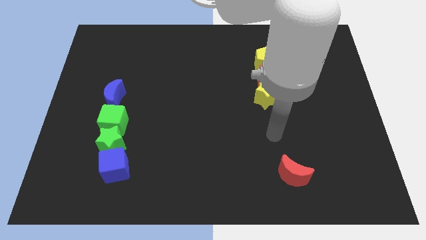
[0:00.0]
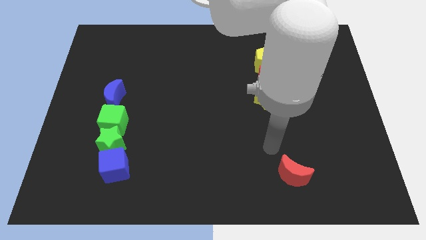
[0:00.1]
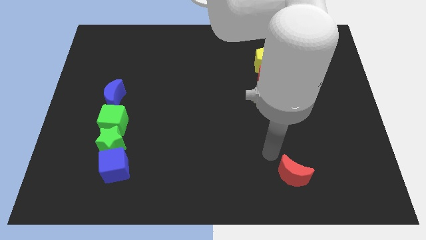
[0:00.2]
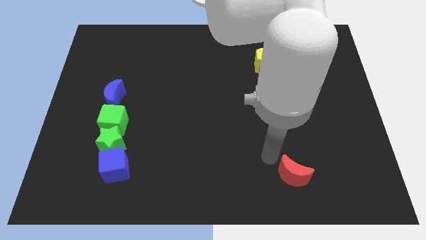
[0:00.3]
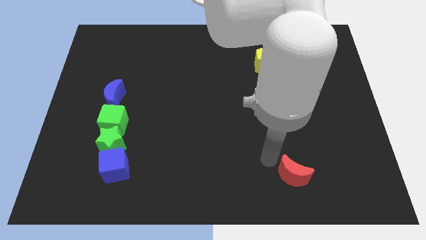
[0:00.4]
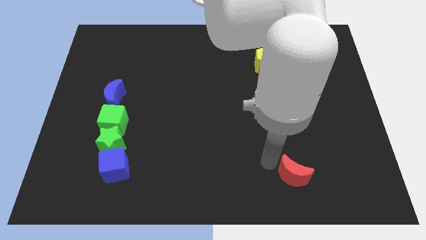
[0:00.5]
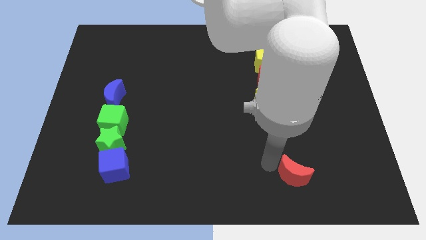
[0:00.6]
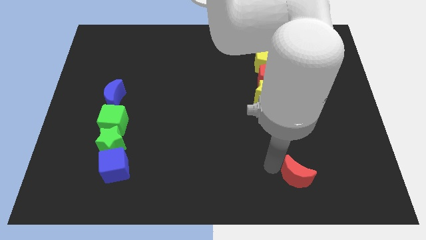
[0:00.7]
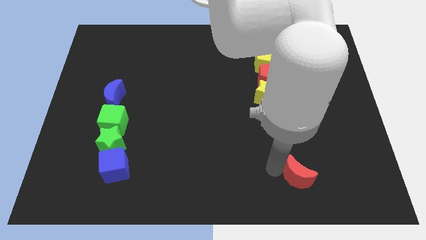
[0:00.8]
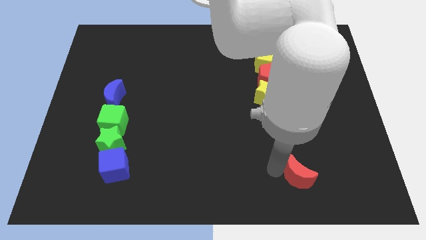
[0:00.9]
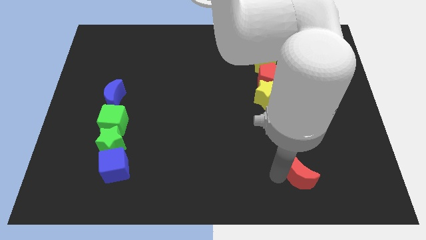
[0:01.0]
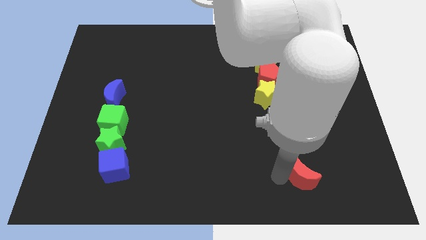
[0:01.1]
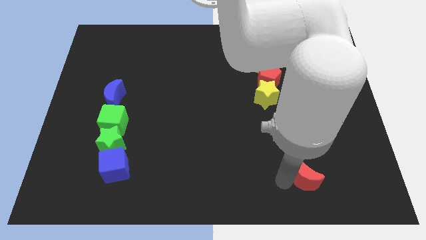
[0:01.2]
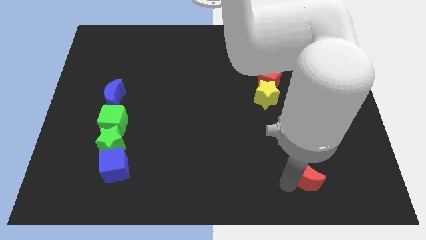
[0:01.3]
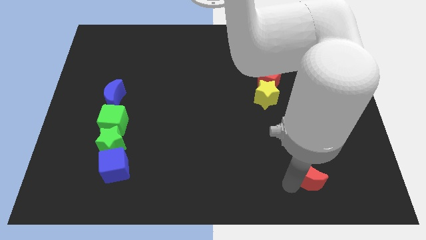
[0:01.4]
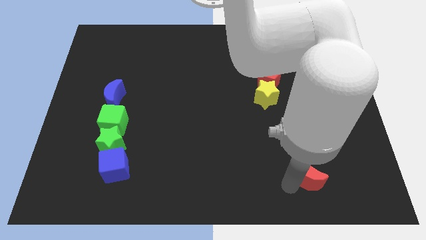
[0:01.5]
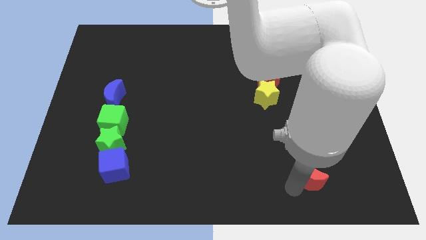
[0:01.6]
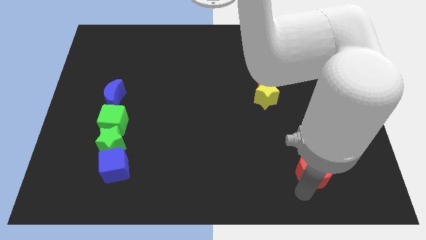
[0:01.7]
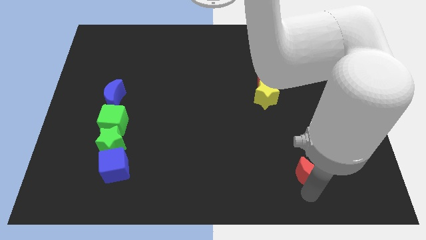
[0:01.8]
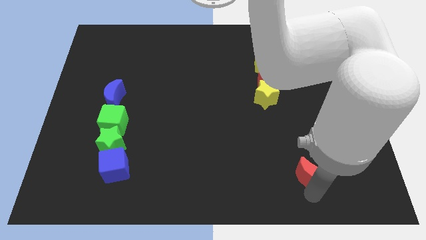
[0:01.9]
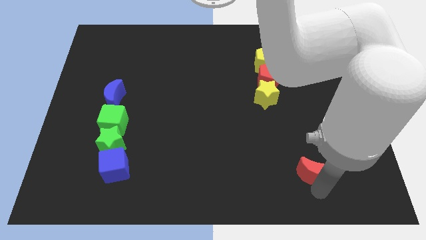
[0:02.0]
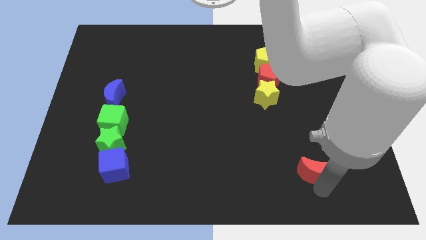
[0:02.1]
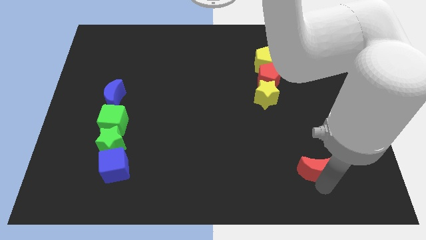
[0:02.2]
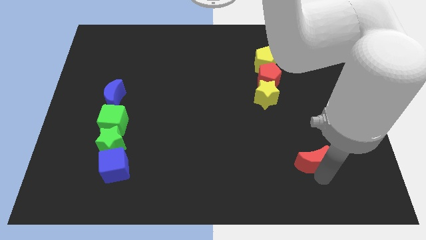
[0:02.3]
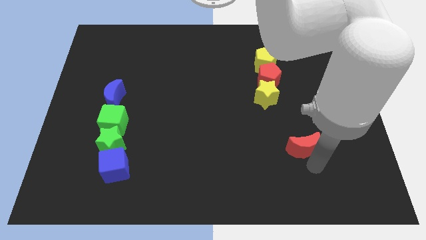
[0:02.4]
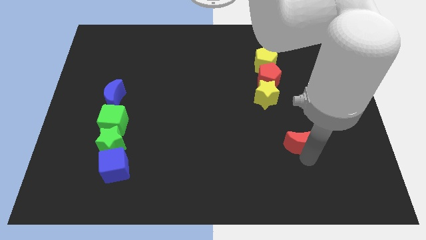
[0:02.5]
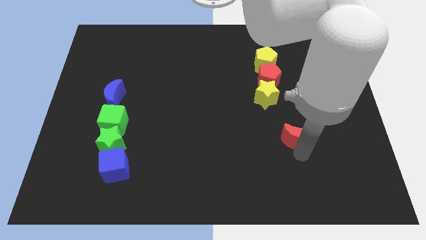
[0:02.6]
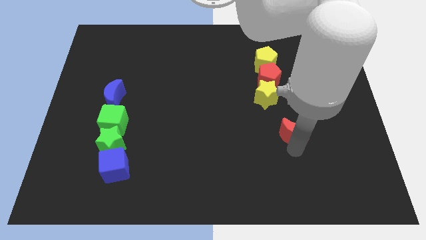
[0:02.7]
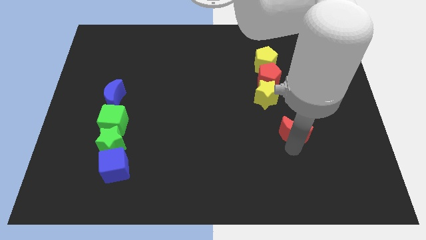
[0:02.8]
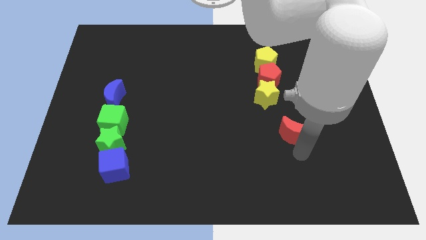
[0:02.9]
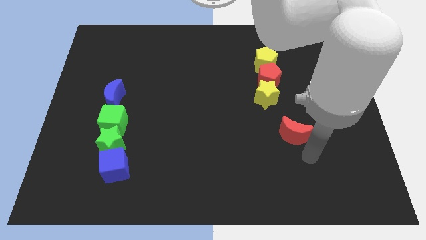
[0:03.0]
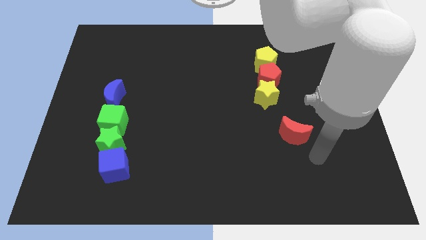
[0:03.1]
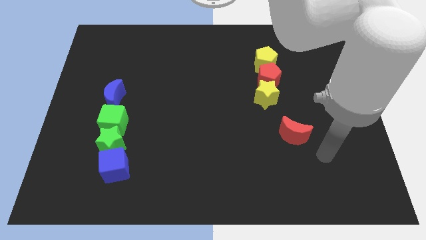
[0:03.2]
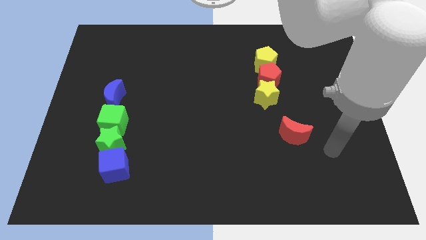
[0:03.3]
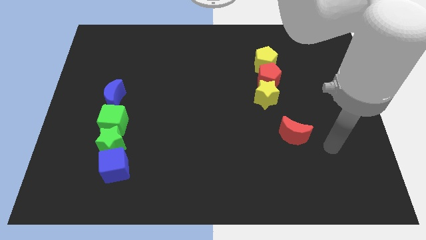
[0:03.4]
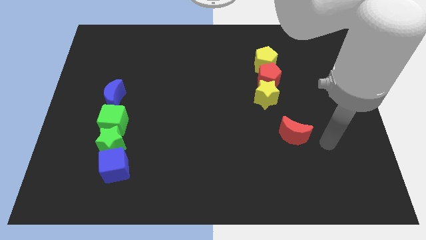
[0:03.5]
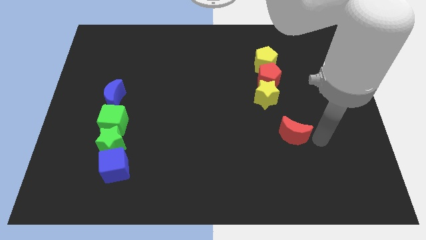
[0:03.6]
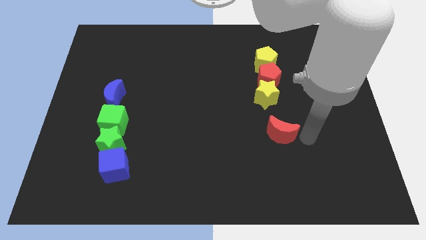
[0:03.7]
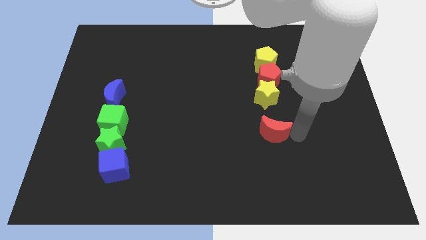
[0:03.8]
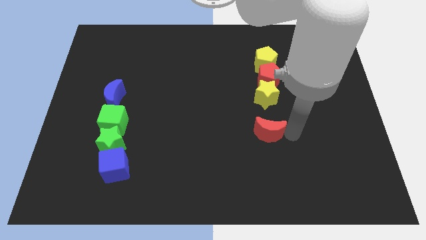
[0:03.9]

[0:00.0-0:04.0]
place the red crescent below the yellow star

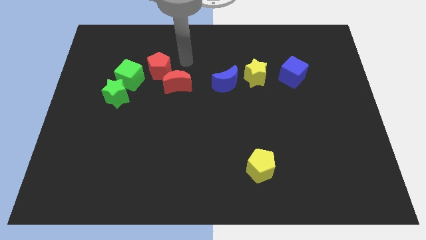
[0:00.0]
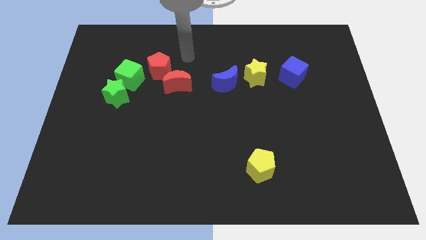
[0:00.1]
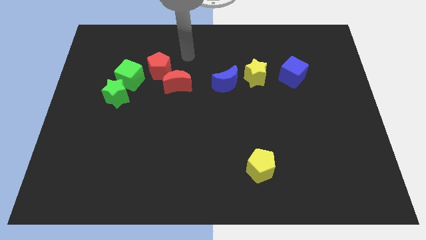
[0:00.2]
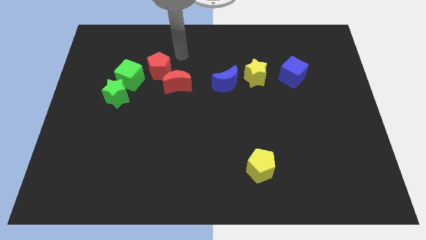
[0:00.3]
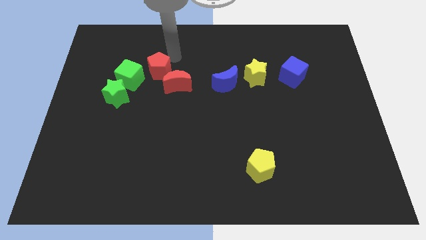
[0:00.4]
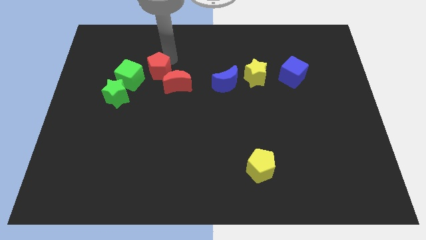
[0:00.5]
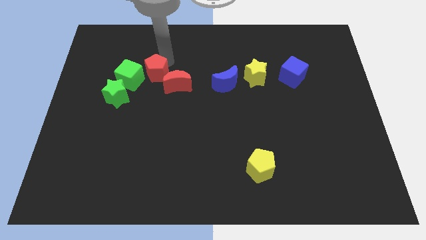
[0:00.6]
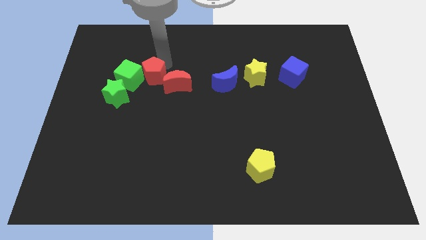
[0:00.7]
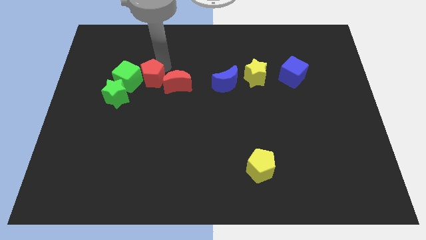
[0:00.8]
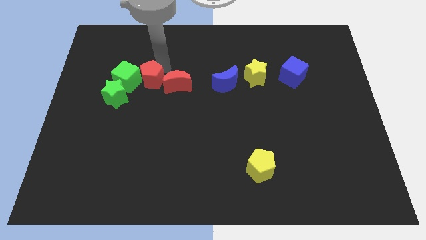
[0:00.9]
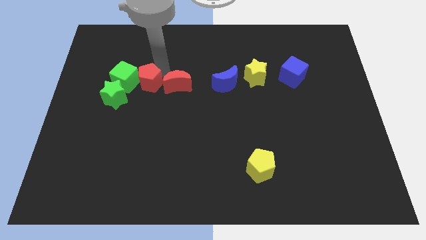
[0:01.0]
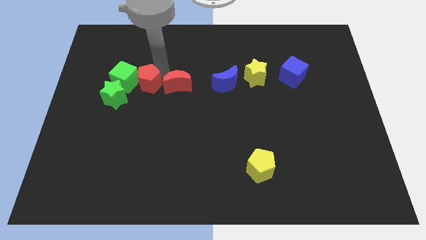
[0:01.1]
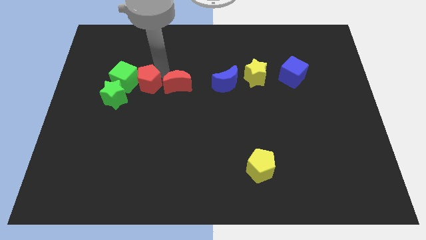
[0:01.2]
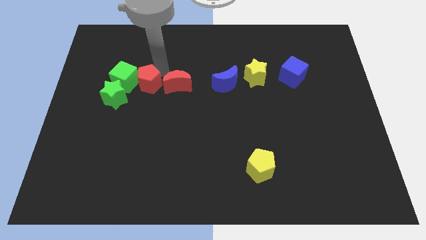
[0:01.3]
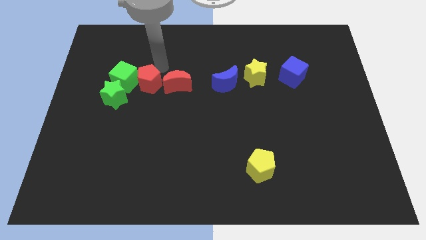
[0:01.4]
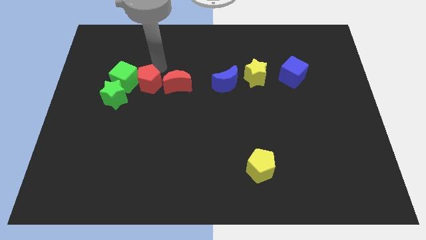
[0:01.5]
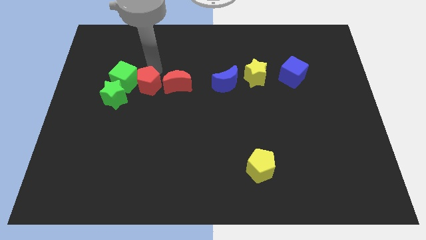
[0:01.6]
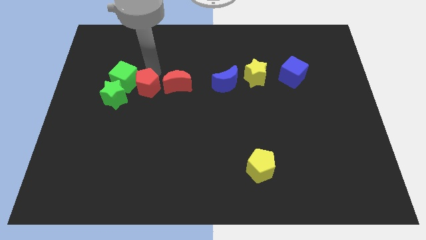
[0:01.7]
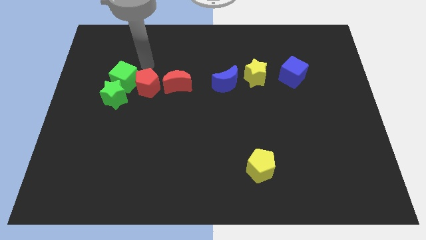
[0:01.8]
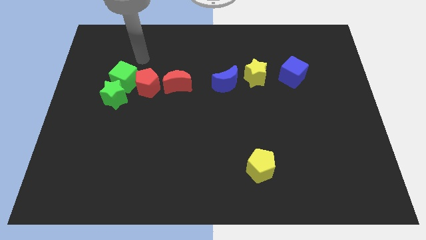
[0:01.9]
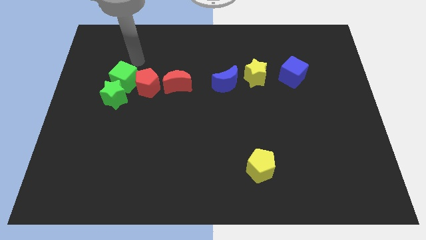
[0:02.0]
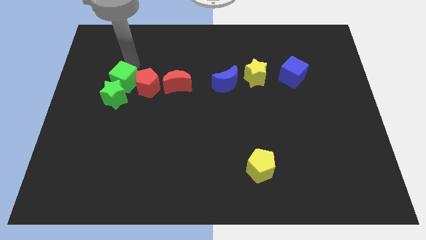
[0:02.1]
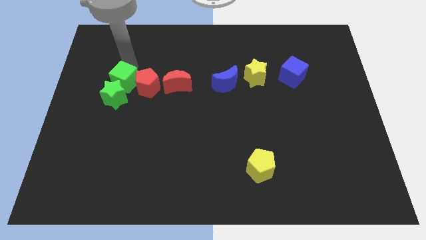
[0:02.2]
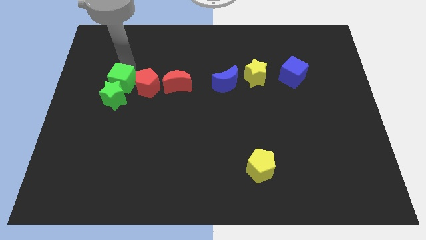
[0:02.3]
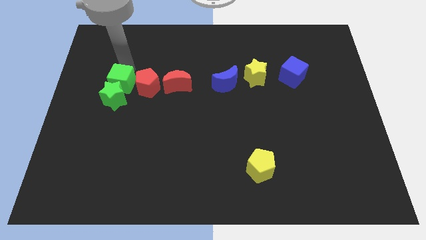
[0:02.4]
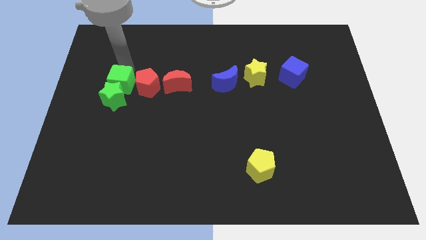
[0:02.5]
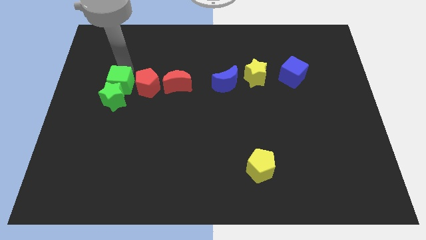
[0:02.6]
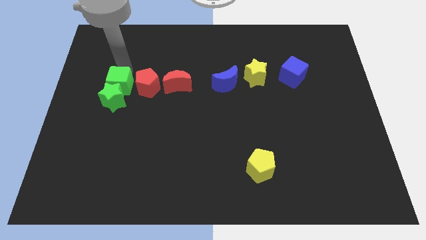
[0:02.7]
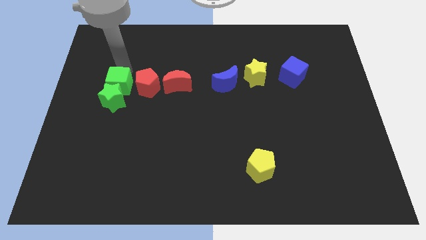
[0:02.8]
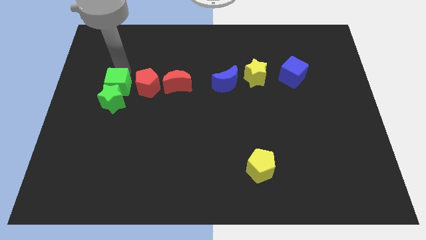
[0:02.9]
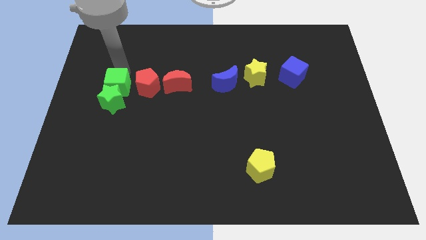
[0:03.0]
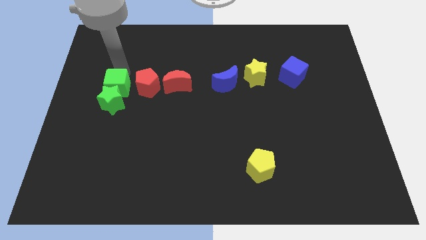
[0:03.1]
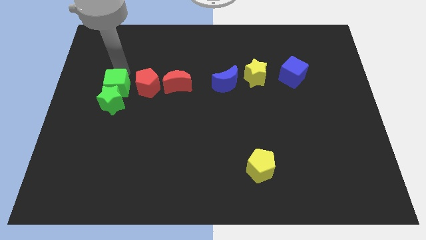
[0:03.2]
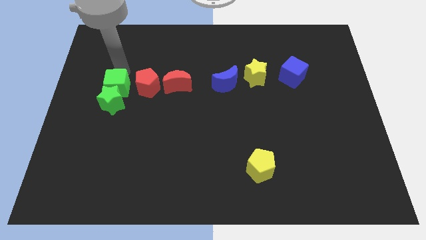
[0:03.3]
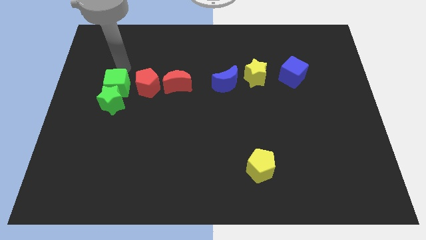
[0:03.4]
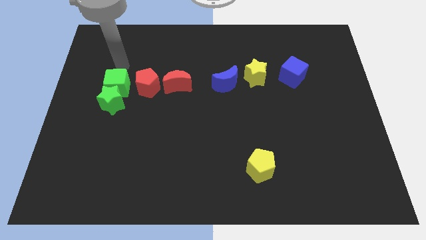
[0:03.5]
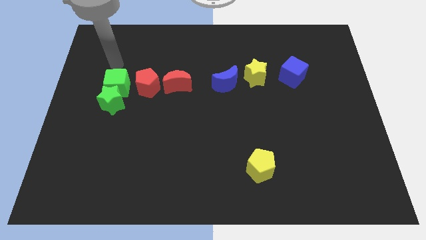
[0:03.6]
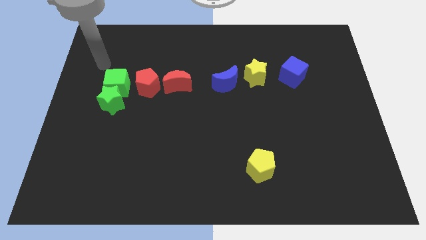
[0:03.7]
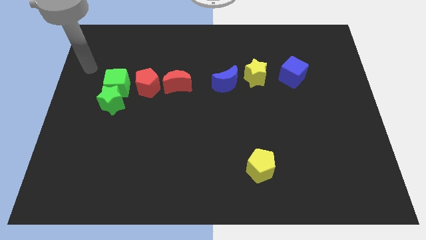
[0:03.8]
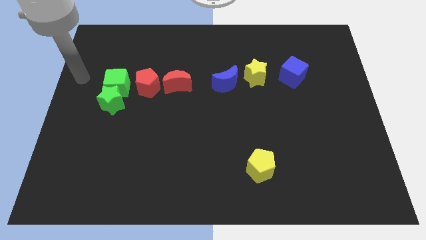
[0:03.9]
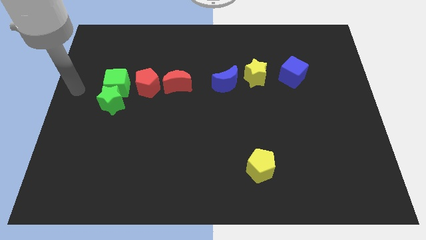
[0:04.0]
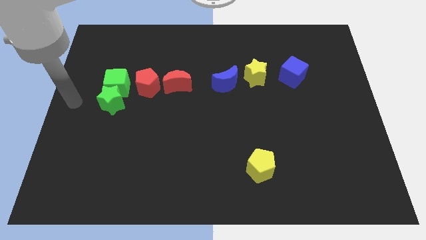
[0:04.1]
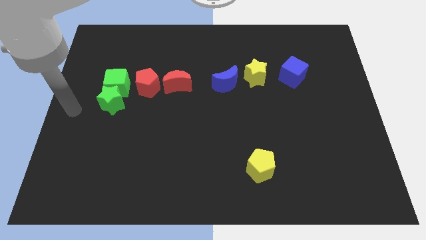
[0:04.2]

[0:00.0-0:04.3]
place the red pentagon and the green cube to the left of the red crescent

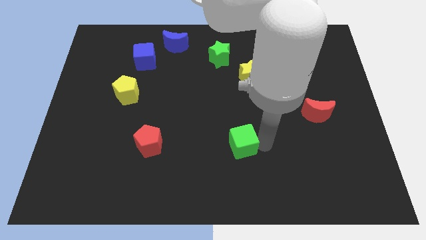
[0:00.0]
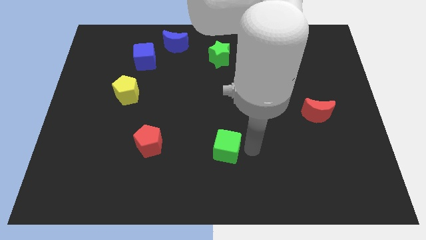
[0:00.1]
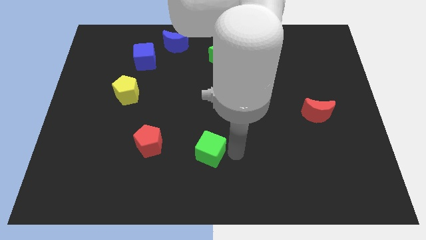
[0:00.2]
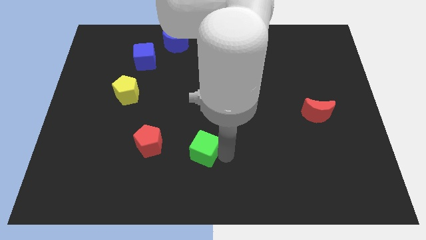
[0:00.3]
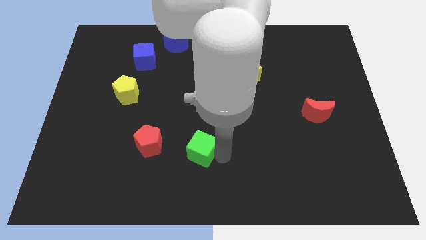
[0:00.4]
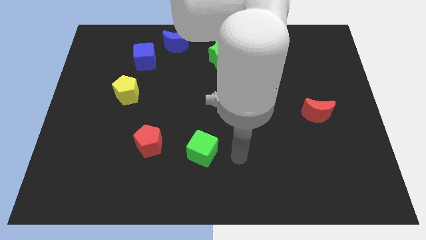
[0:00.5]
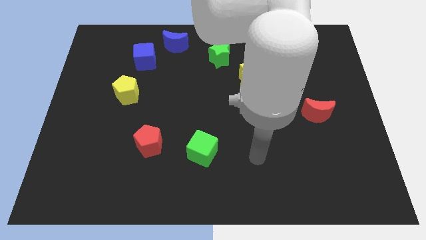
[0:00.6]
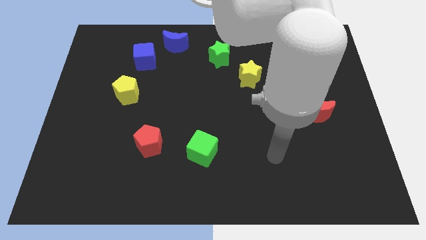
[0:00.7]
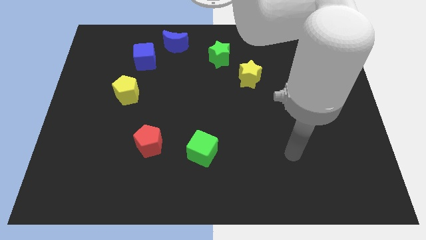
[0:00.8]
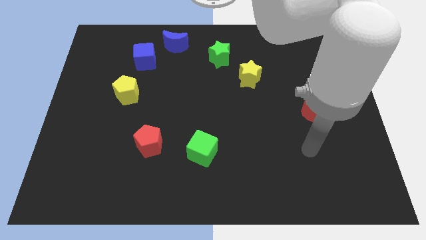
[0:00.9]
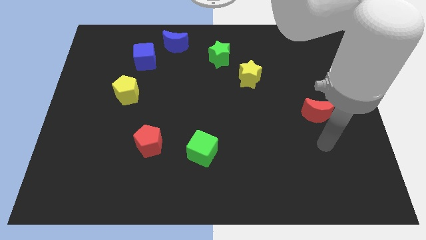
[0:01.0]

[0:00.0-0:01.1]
place the green cube right o red pentagon
